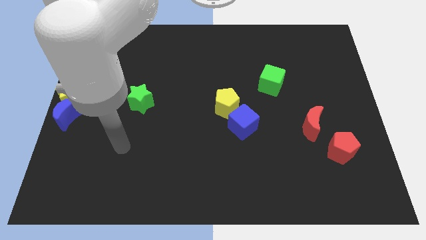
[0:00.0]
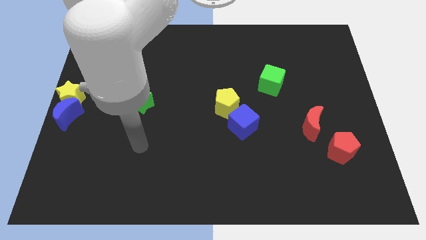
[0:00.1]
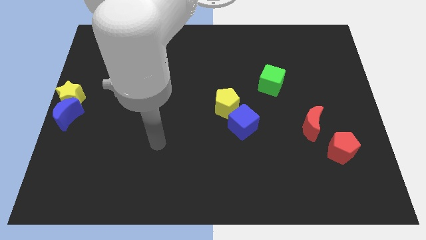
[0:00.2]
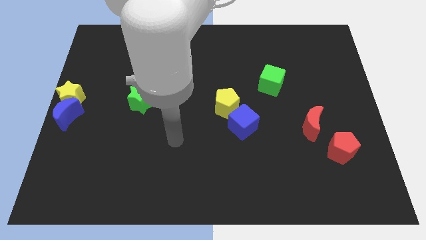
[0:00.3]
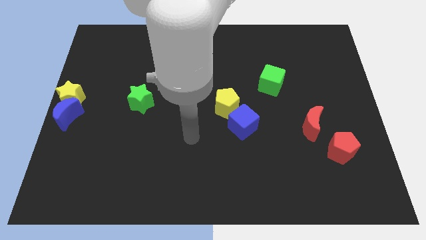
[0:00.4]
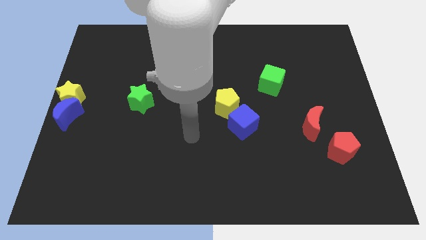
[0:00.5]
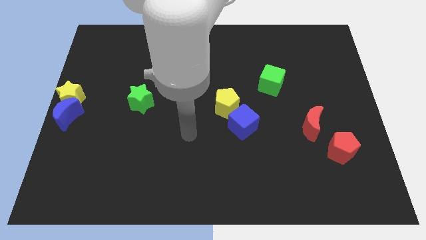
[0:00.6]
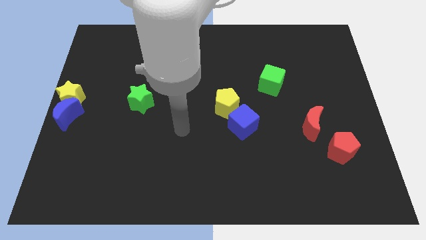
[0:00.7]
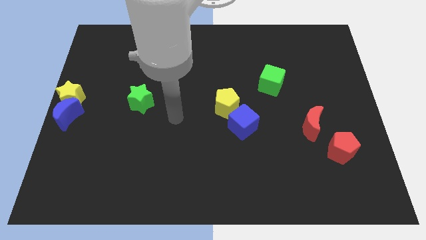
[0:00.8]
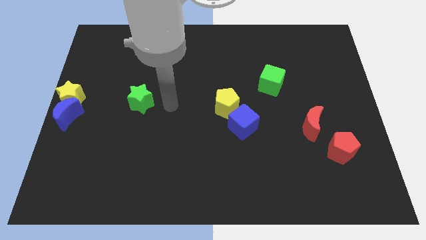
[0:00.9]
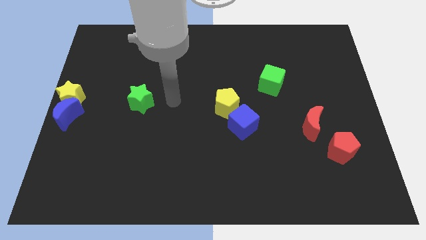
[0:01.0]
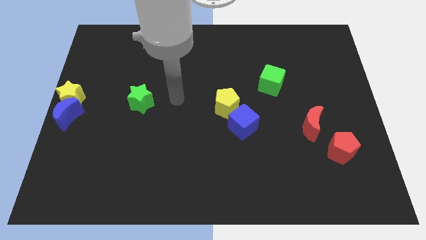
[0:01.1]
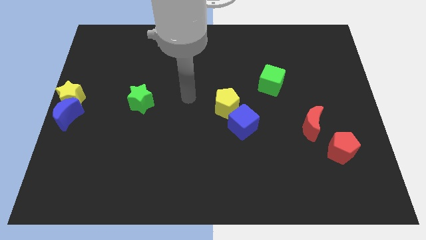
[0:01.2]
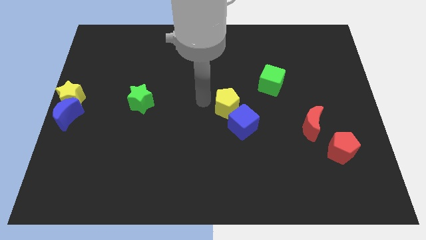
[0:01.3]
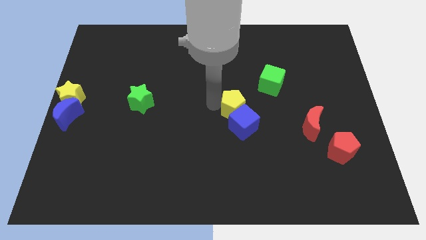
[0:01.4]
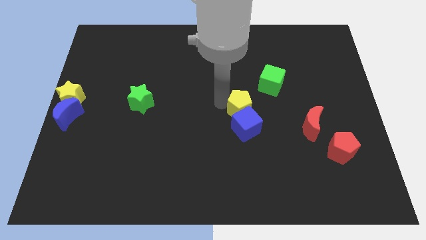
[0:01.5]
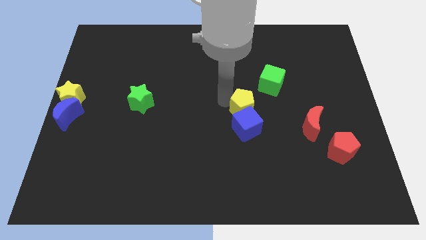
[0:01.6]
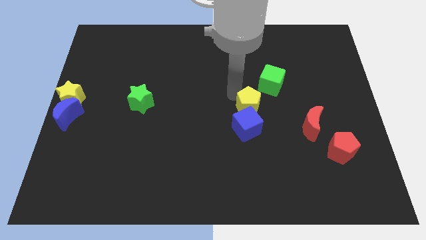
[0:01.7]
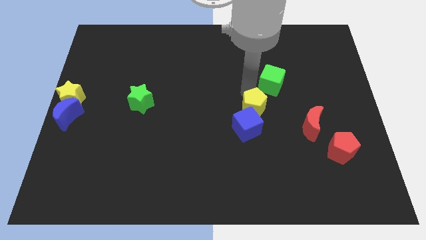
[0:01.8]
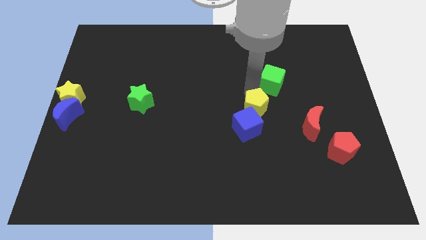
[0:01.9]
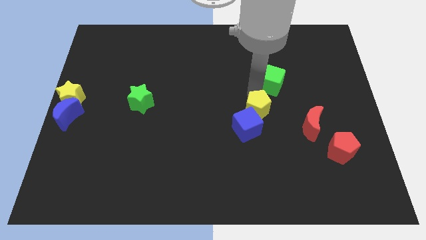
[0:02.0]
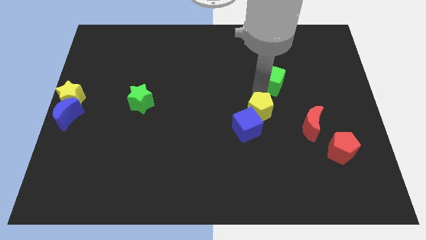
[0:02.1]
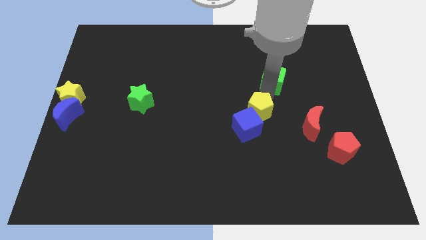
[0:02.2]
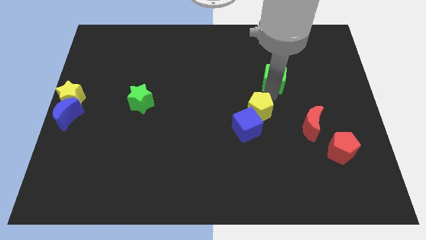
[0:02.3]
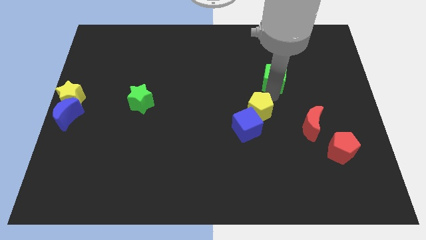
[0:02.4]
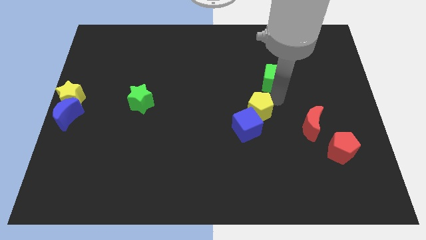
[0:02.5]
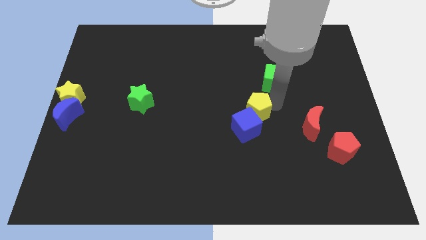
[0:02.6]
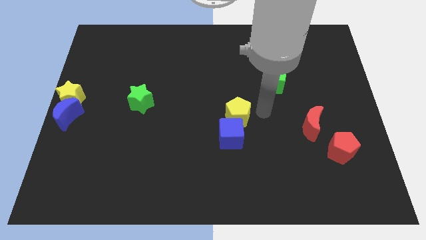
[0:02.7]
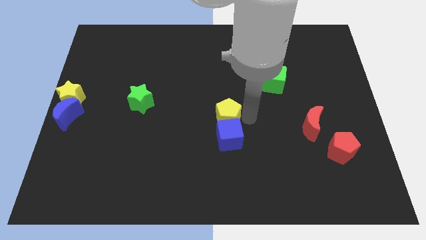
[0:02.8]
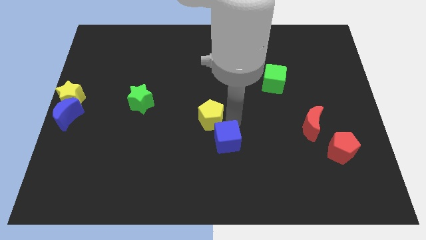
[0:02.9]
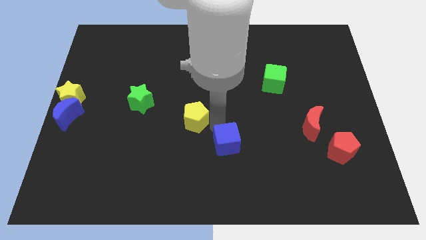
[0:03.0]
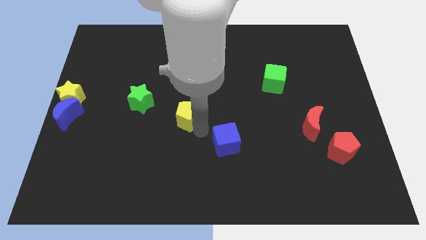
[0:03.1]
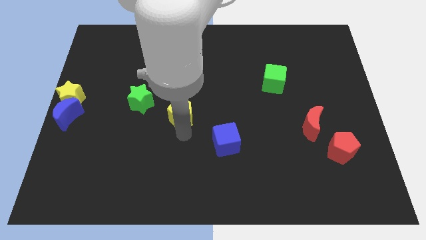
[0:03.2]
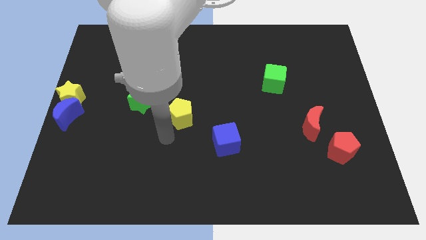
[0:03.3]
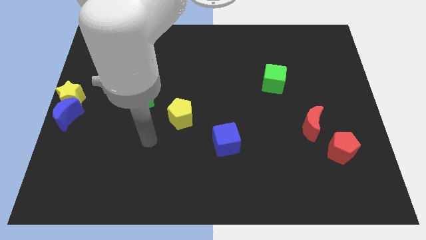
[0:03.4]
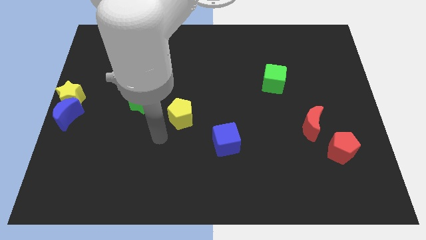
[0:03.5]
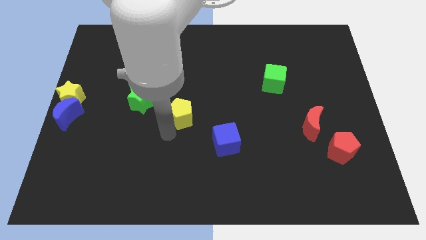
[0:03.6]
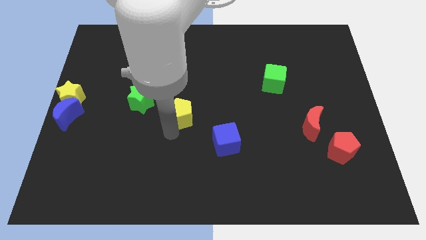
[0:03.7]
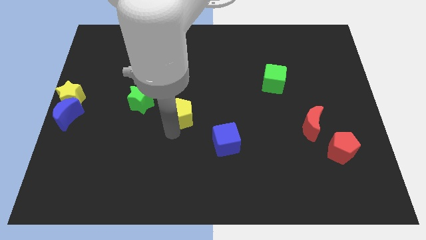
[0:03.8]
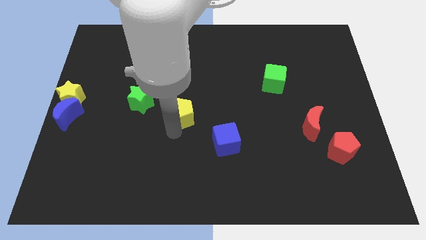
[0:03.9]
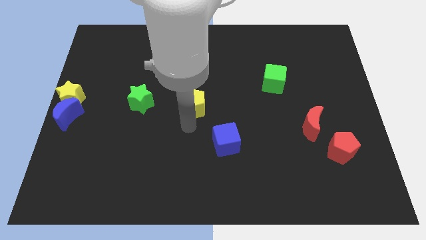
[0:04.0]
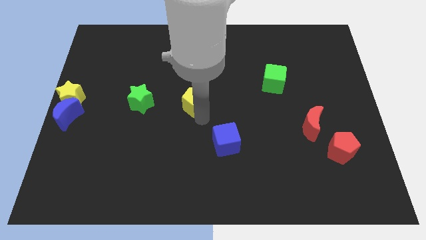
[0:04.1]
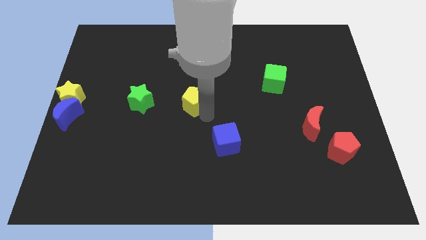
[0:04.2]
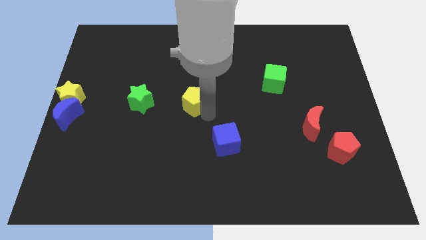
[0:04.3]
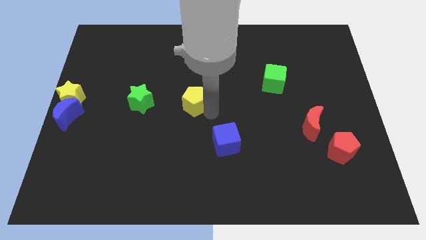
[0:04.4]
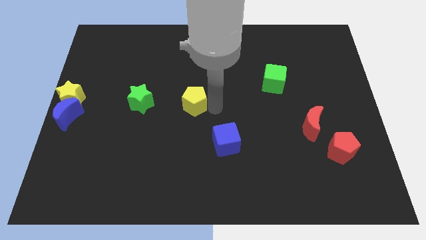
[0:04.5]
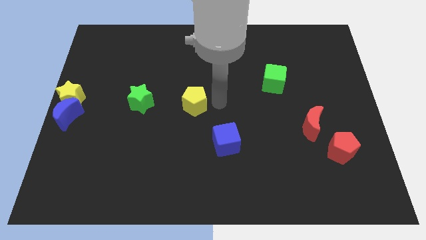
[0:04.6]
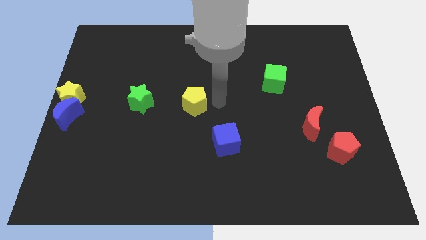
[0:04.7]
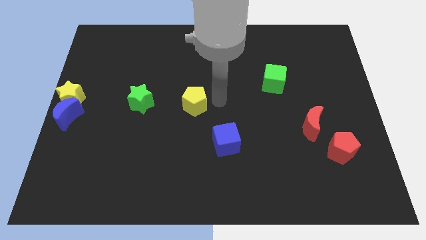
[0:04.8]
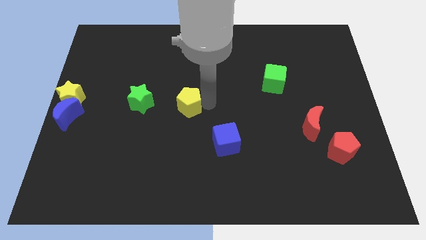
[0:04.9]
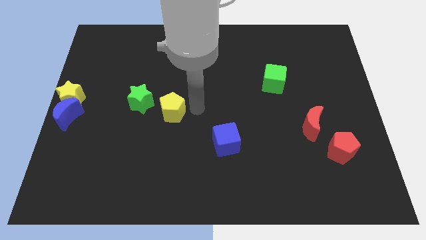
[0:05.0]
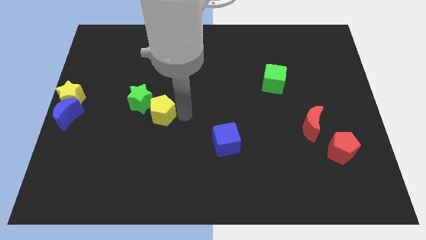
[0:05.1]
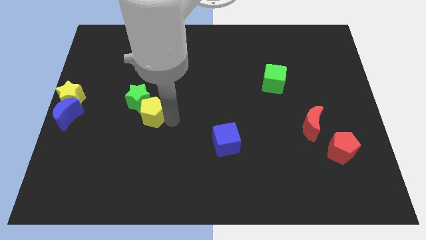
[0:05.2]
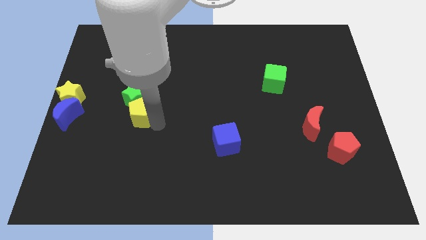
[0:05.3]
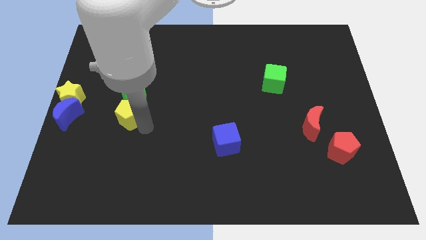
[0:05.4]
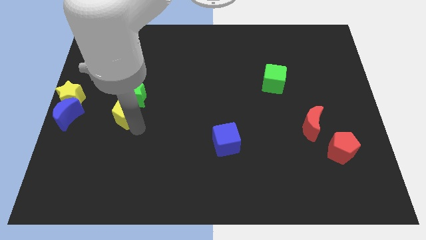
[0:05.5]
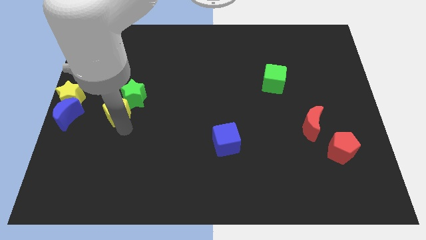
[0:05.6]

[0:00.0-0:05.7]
place the yellow pentagon underneath the green star

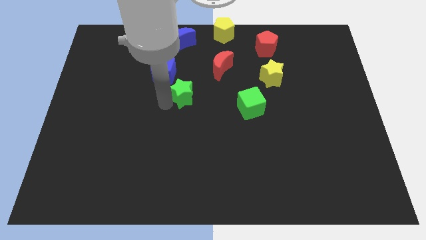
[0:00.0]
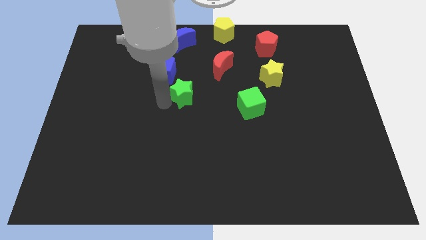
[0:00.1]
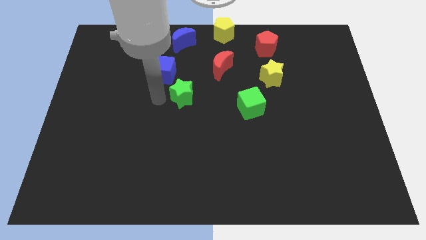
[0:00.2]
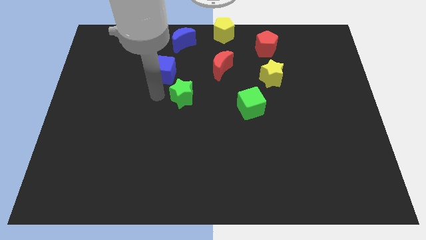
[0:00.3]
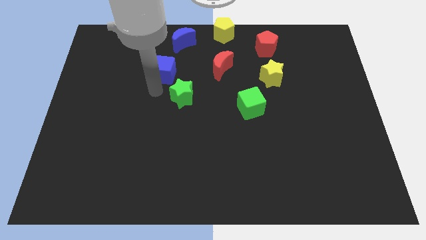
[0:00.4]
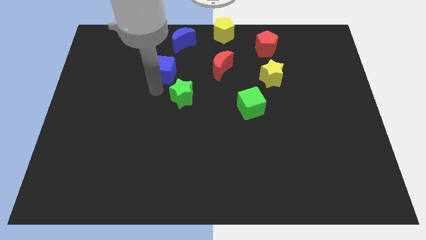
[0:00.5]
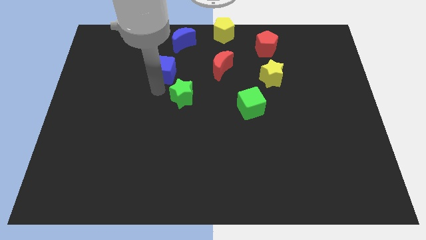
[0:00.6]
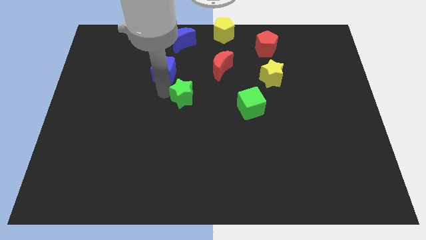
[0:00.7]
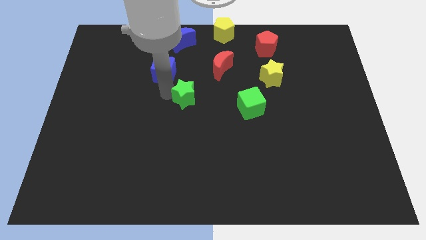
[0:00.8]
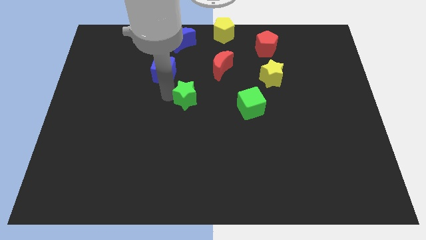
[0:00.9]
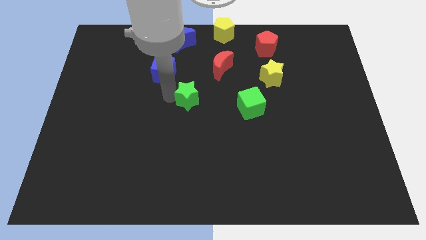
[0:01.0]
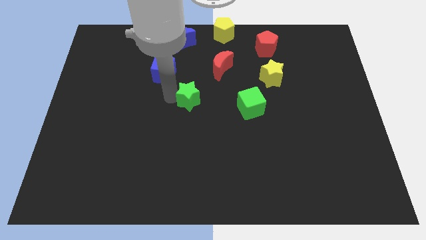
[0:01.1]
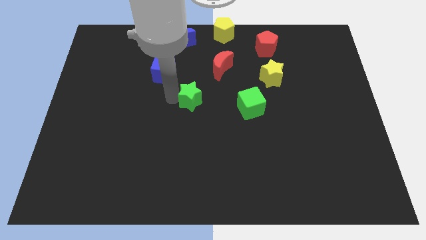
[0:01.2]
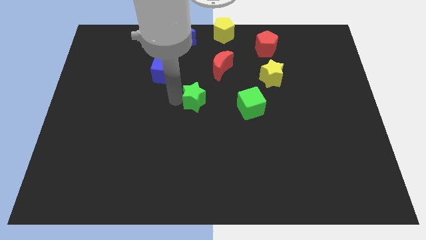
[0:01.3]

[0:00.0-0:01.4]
push the green star to the center of the board

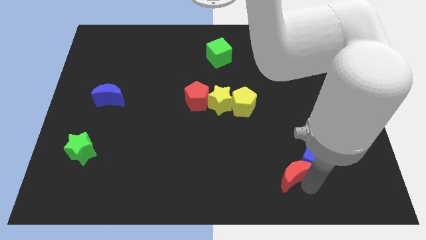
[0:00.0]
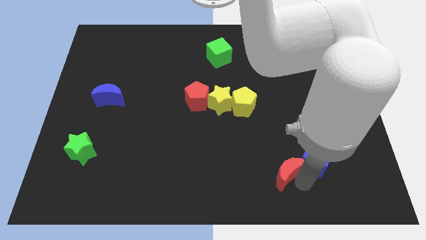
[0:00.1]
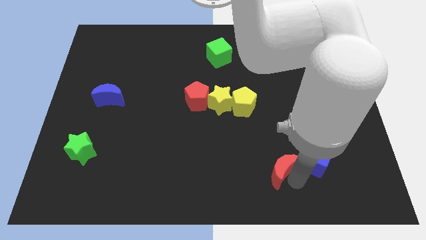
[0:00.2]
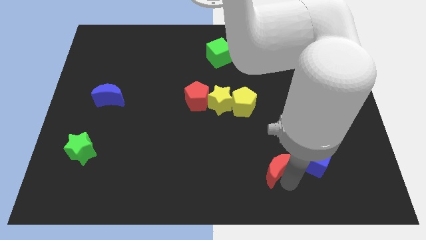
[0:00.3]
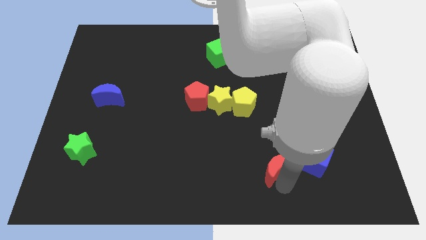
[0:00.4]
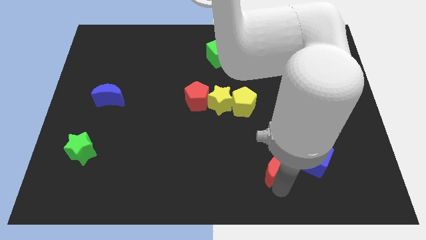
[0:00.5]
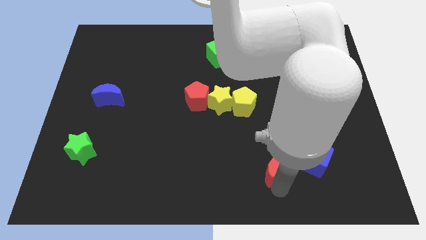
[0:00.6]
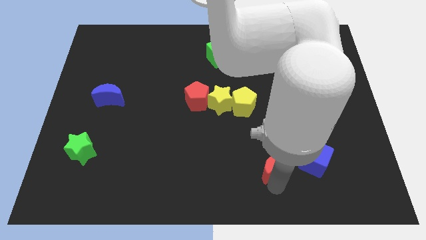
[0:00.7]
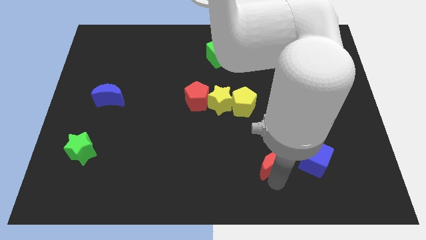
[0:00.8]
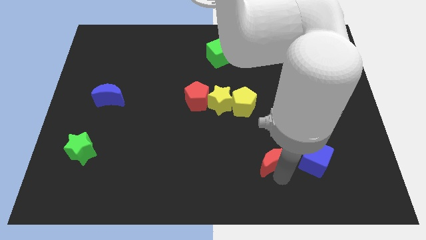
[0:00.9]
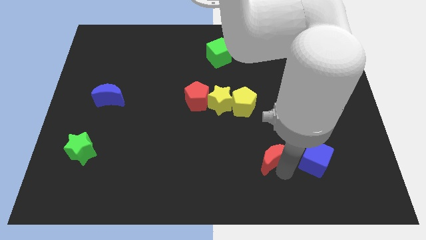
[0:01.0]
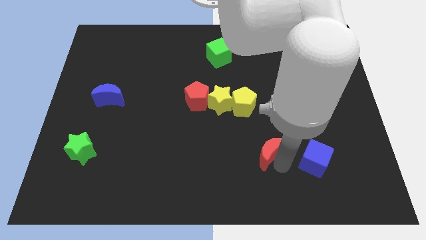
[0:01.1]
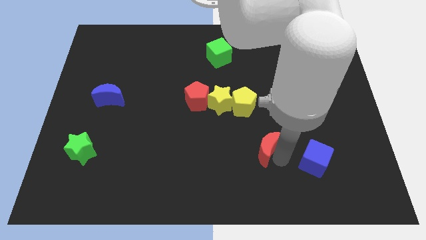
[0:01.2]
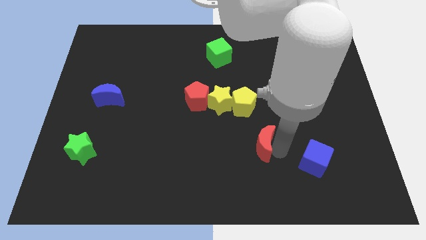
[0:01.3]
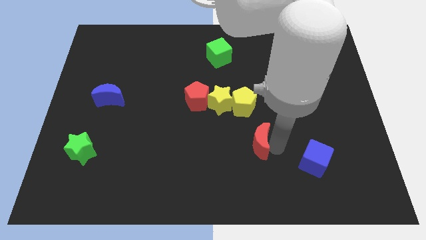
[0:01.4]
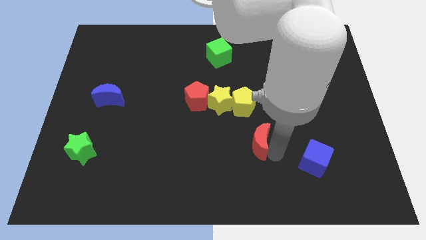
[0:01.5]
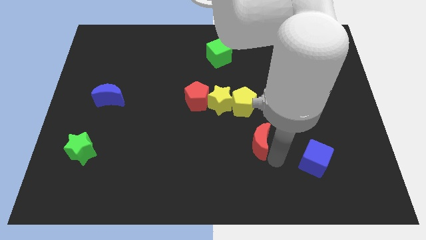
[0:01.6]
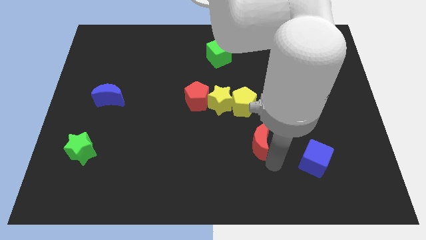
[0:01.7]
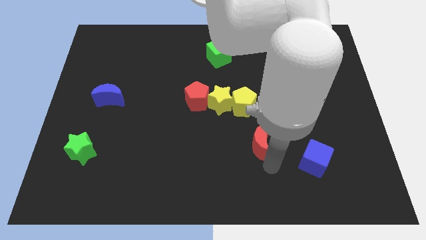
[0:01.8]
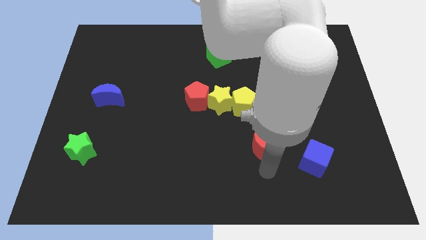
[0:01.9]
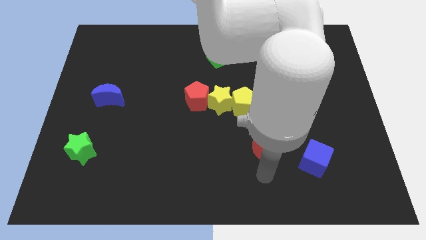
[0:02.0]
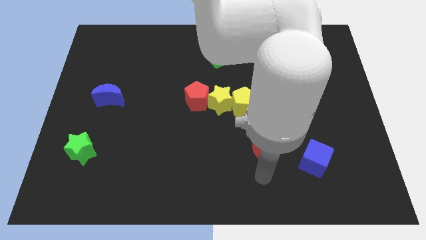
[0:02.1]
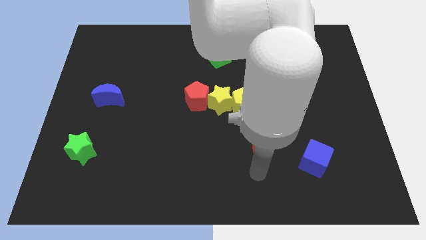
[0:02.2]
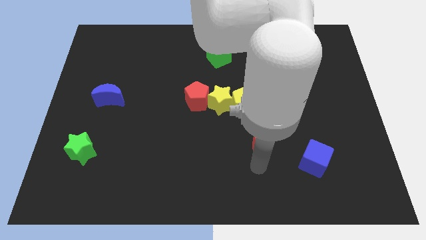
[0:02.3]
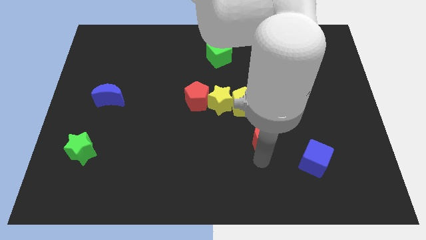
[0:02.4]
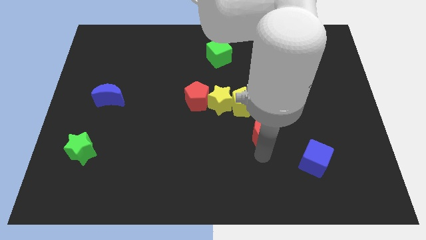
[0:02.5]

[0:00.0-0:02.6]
push the red crescent away from the blue cube
